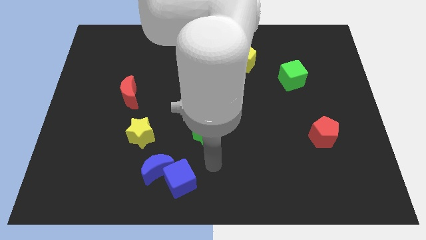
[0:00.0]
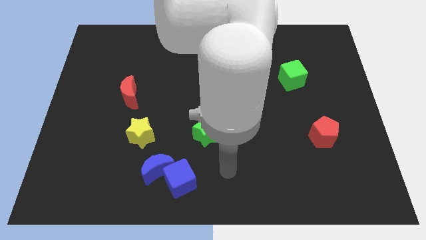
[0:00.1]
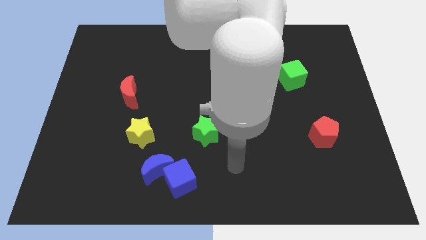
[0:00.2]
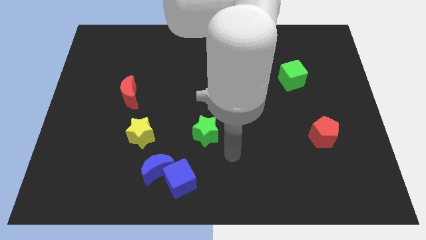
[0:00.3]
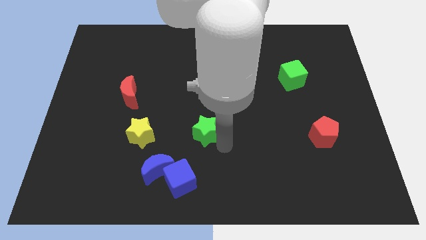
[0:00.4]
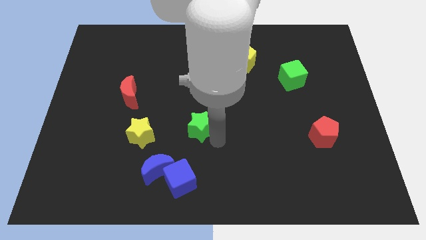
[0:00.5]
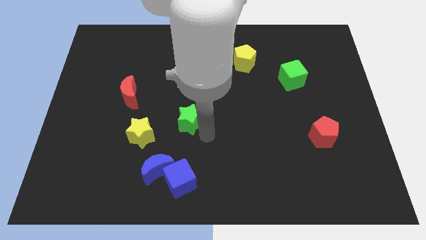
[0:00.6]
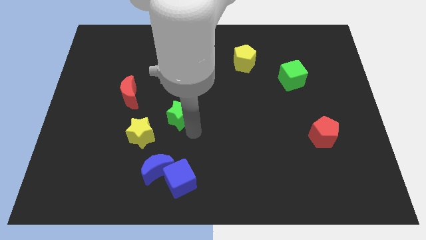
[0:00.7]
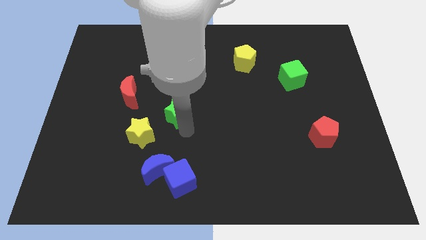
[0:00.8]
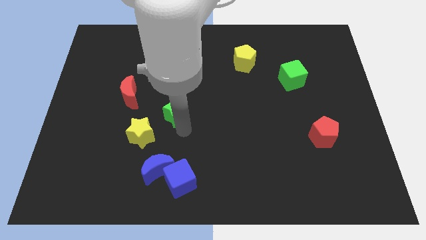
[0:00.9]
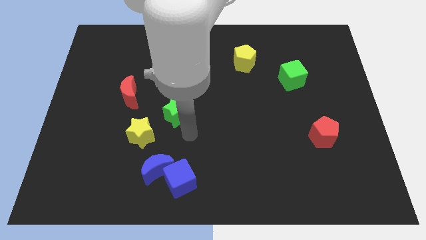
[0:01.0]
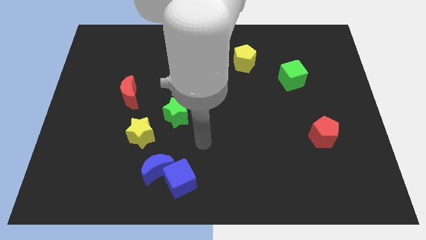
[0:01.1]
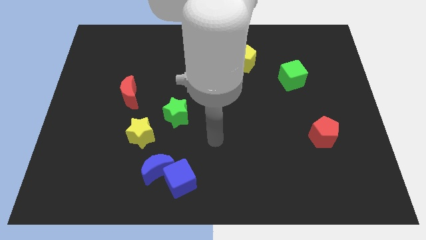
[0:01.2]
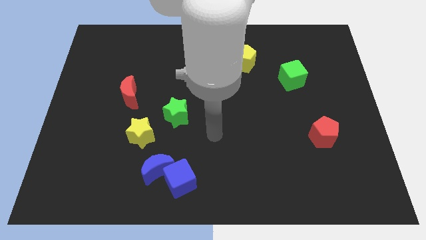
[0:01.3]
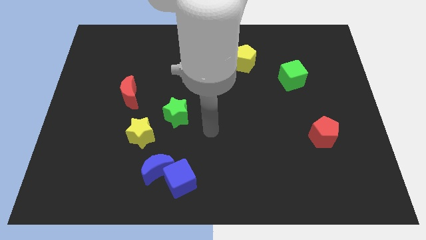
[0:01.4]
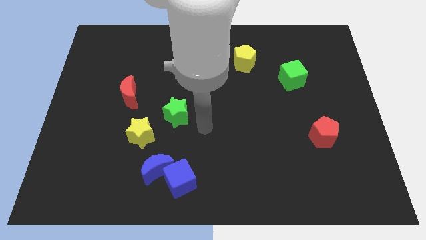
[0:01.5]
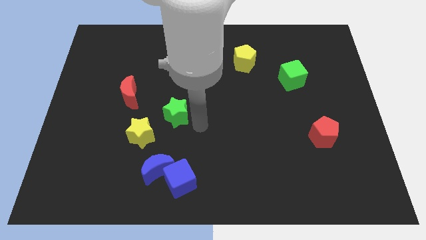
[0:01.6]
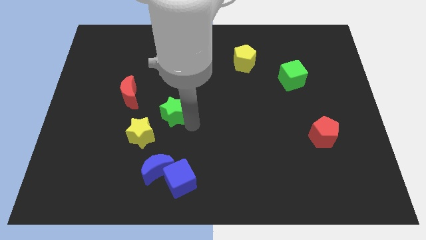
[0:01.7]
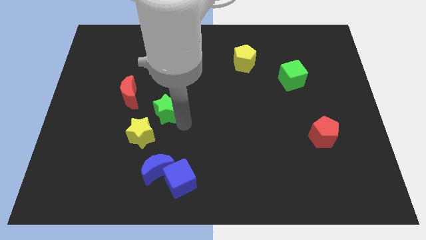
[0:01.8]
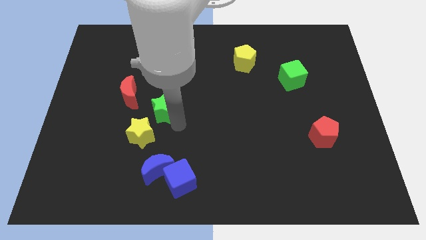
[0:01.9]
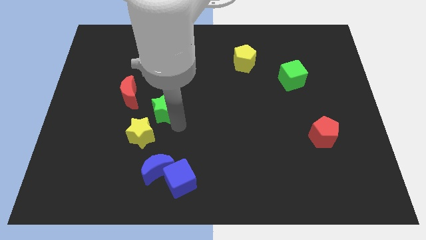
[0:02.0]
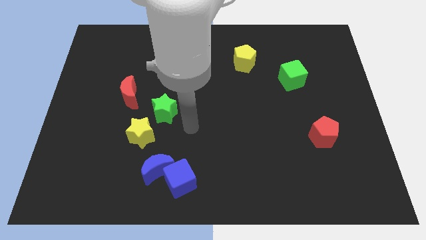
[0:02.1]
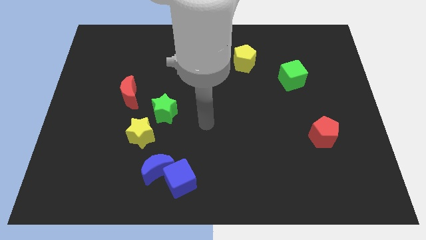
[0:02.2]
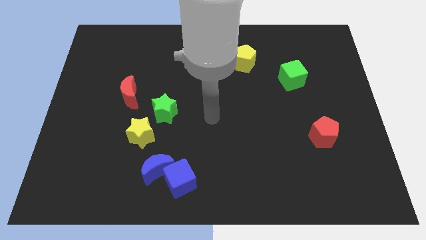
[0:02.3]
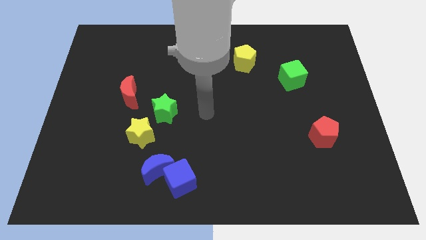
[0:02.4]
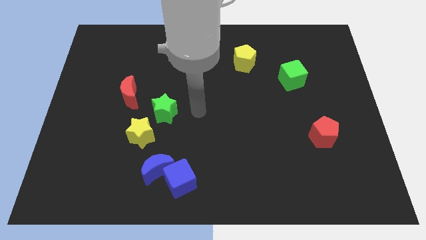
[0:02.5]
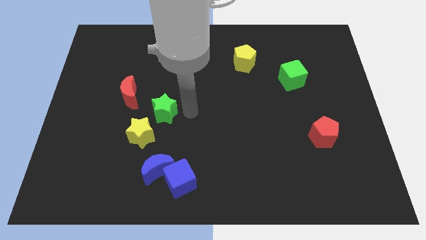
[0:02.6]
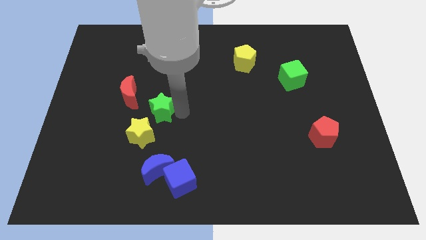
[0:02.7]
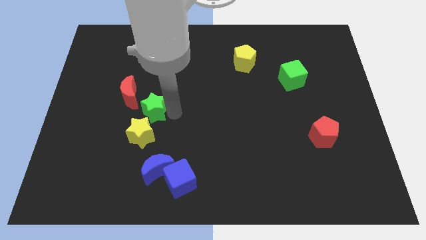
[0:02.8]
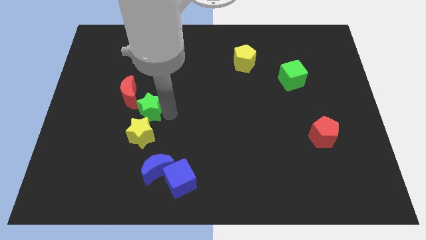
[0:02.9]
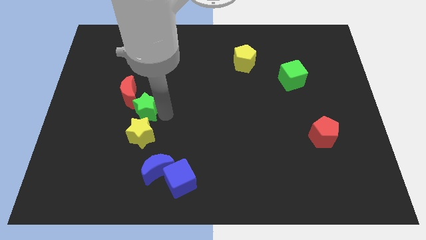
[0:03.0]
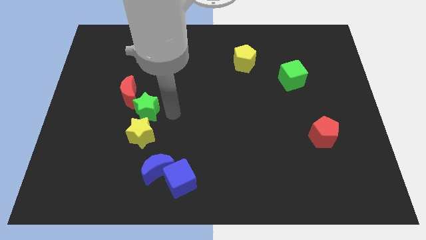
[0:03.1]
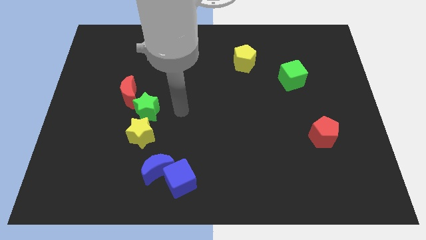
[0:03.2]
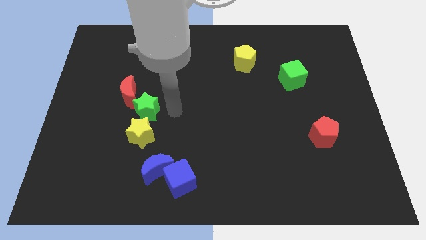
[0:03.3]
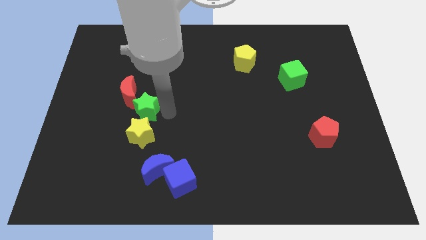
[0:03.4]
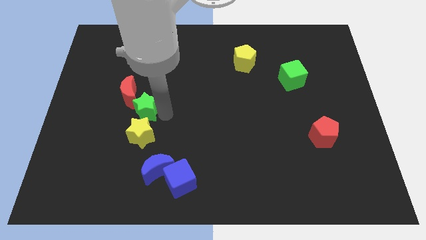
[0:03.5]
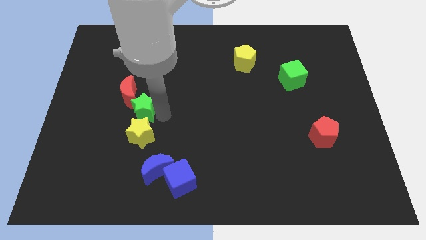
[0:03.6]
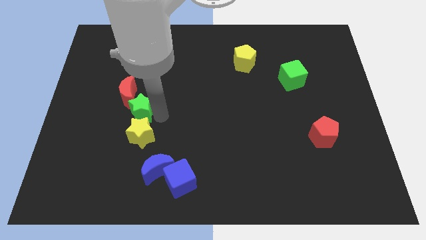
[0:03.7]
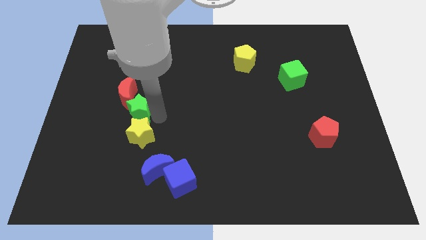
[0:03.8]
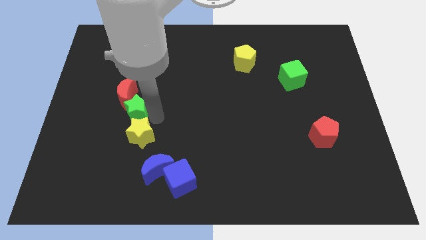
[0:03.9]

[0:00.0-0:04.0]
move the green star to the top of yellow star

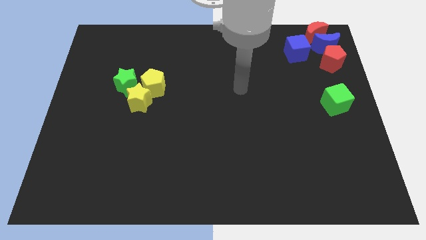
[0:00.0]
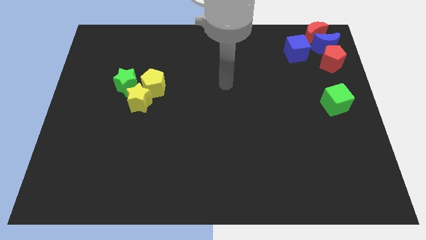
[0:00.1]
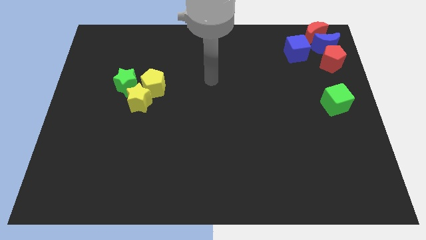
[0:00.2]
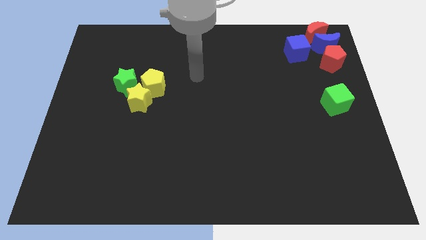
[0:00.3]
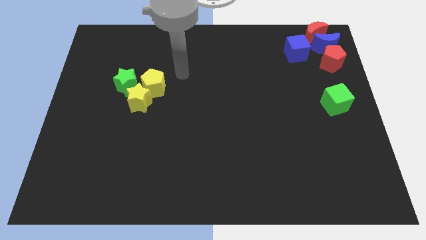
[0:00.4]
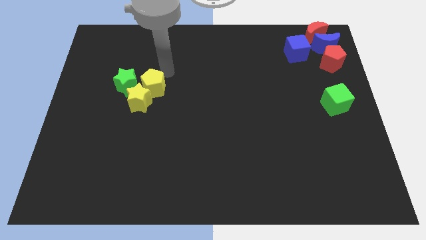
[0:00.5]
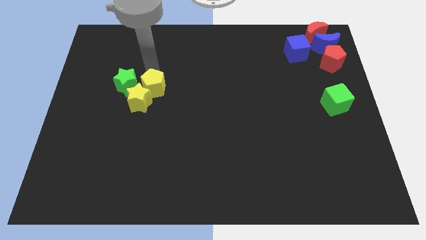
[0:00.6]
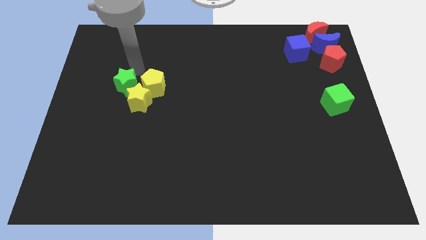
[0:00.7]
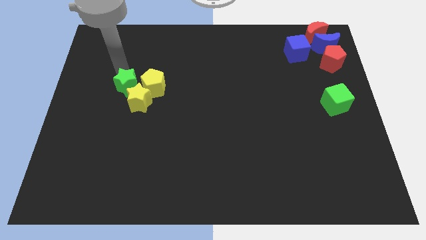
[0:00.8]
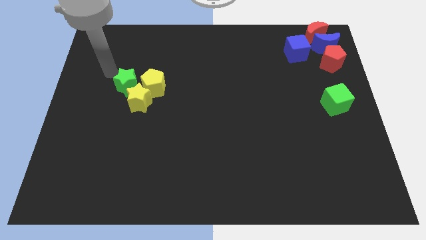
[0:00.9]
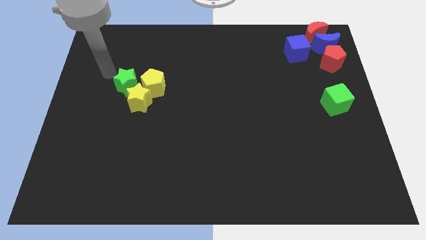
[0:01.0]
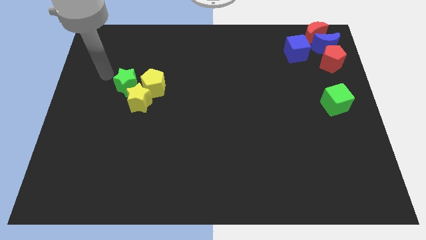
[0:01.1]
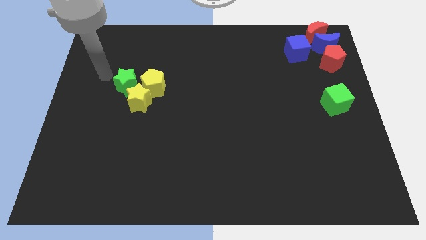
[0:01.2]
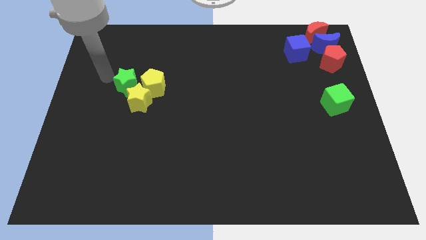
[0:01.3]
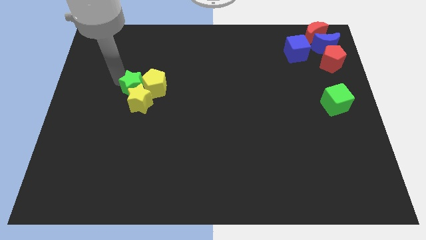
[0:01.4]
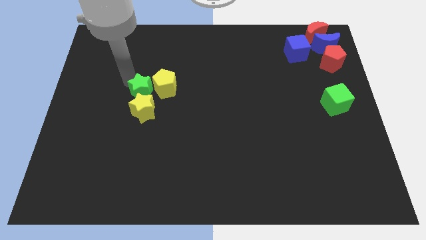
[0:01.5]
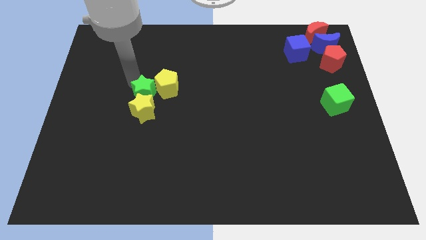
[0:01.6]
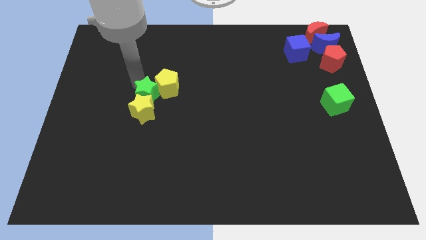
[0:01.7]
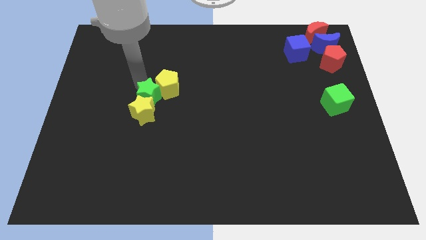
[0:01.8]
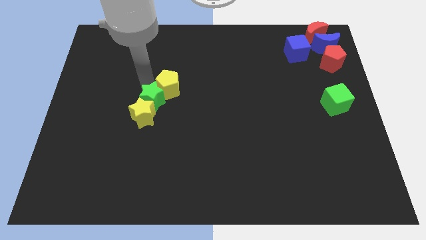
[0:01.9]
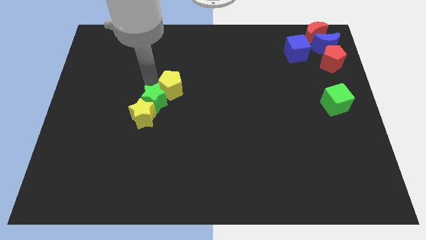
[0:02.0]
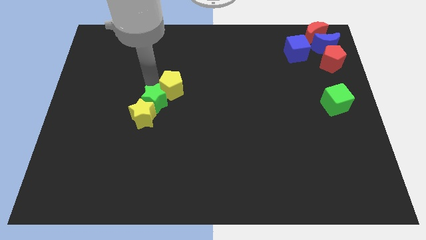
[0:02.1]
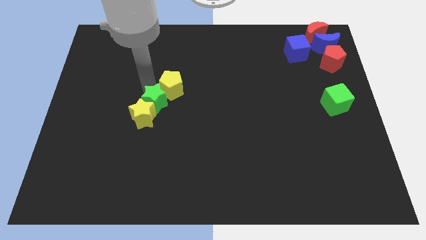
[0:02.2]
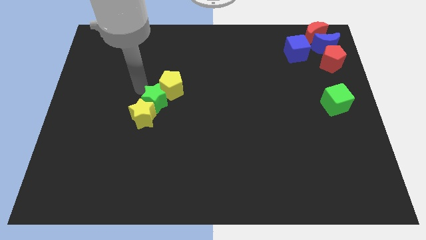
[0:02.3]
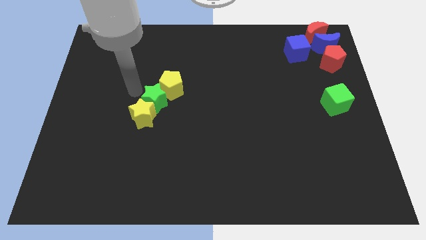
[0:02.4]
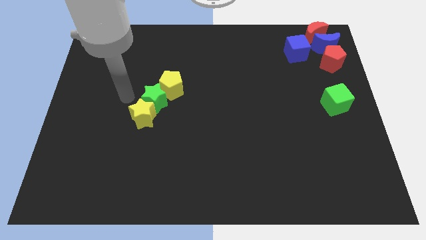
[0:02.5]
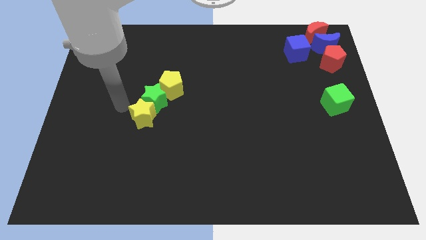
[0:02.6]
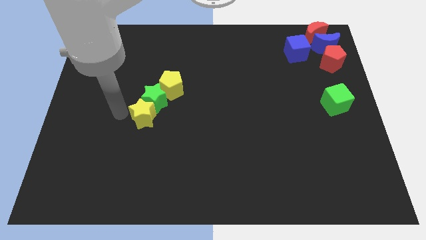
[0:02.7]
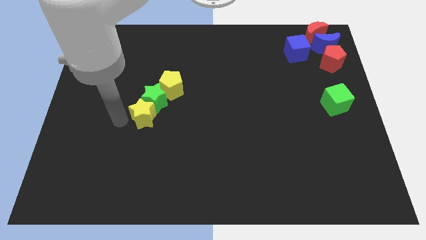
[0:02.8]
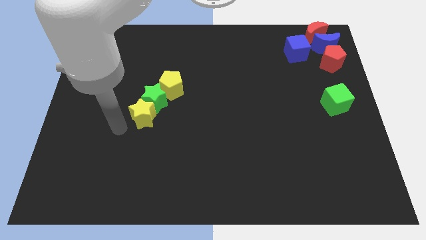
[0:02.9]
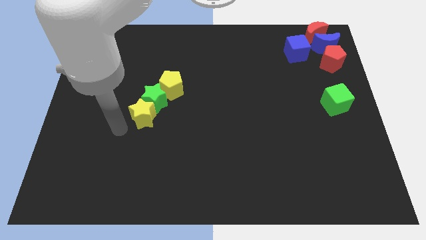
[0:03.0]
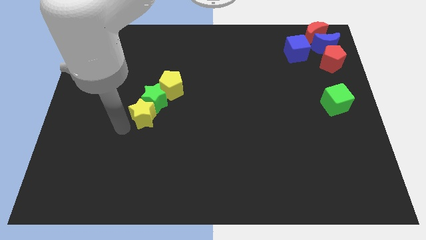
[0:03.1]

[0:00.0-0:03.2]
place the green star in between yellow pentagon and yellow star

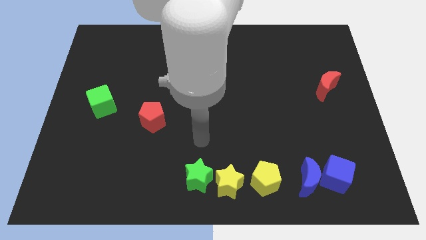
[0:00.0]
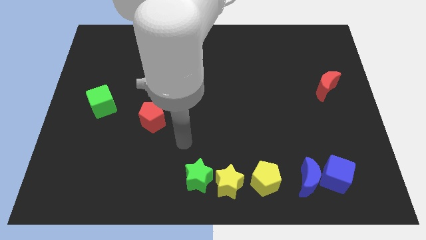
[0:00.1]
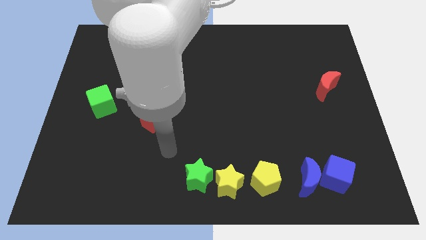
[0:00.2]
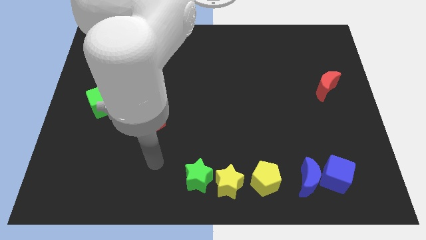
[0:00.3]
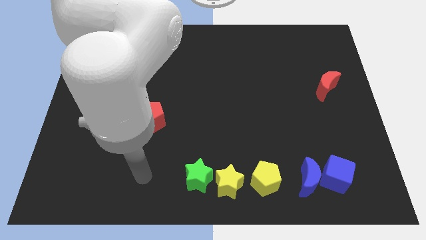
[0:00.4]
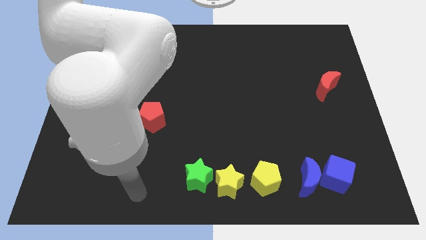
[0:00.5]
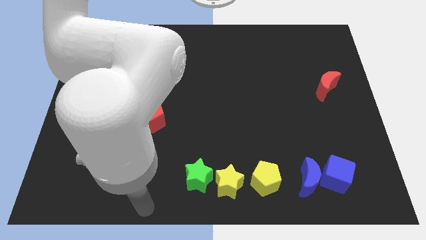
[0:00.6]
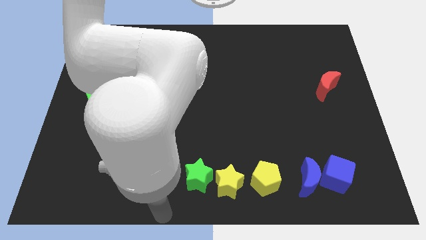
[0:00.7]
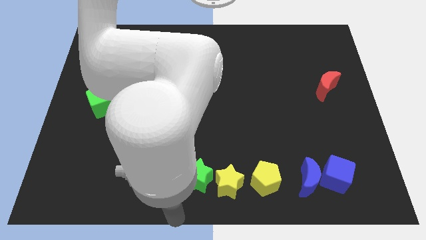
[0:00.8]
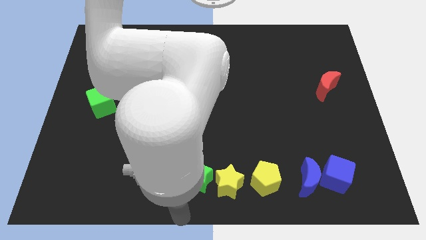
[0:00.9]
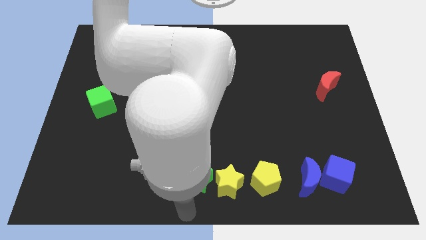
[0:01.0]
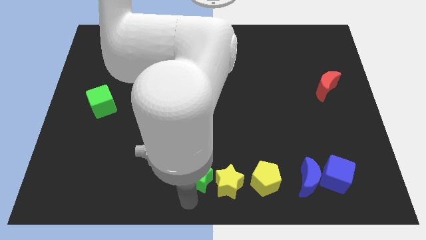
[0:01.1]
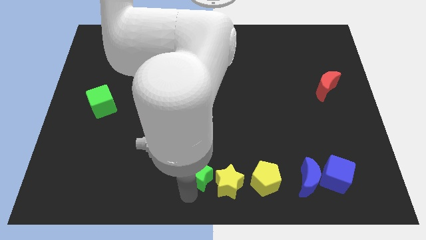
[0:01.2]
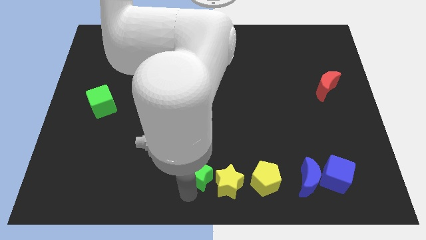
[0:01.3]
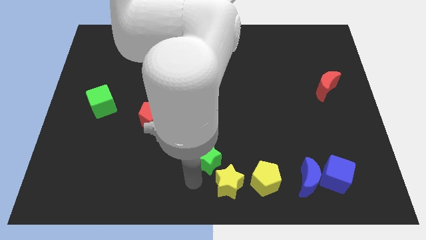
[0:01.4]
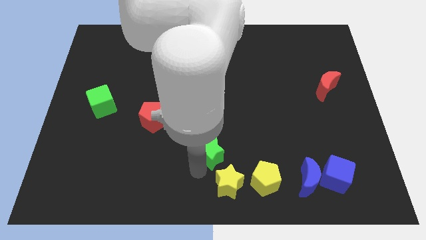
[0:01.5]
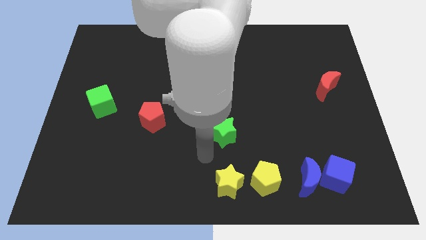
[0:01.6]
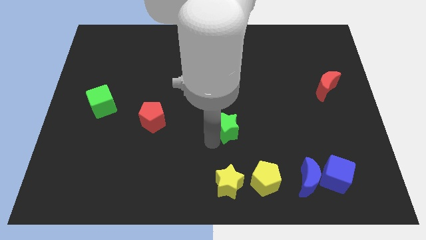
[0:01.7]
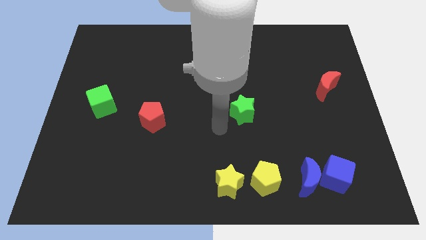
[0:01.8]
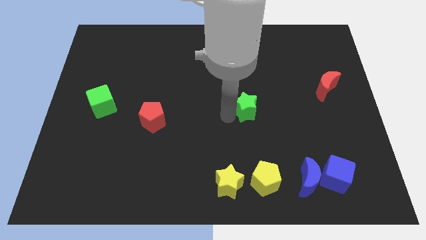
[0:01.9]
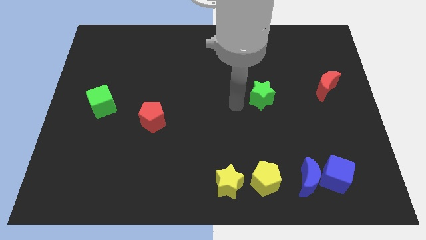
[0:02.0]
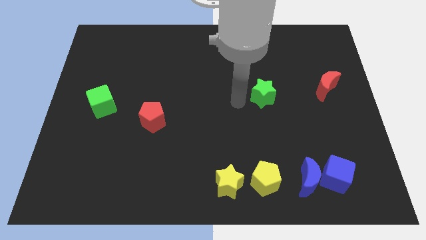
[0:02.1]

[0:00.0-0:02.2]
move the green star towards the red moon
